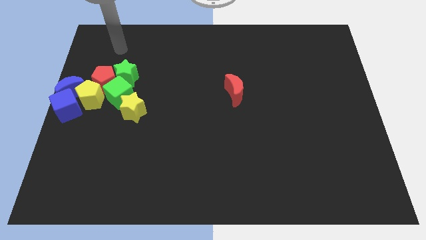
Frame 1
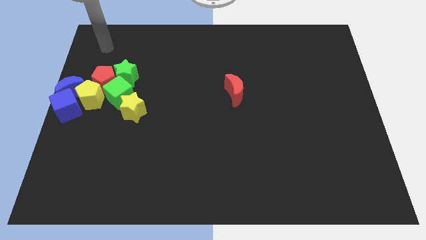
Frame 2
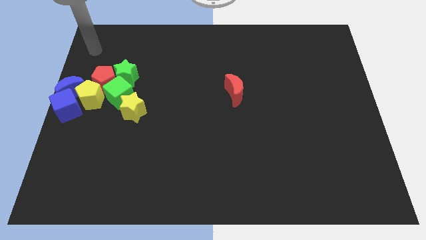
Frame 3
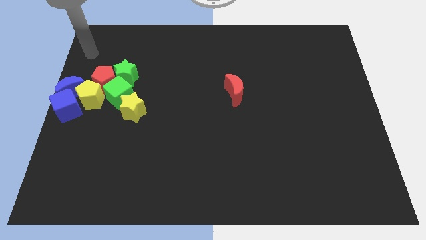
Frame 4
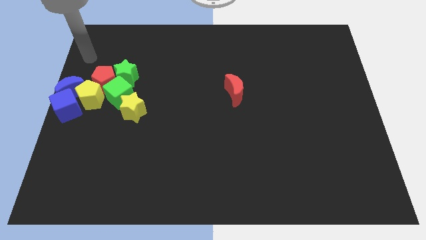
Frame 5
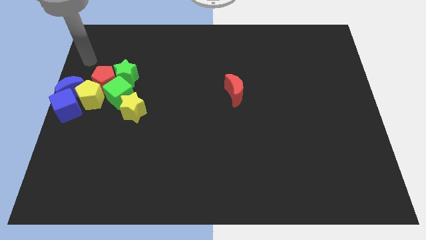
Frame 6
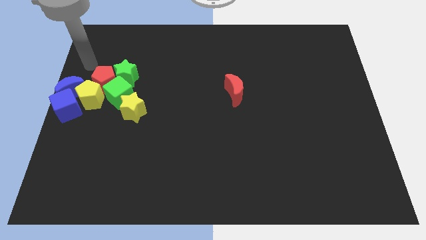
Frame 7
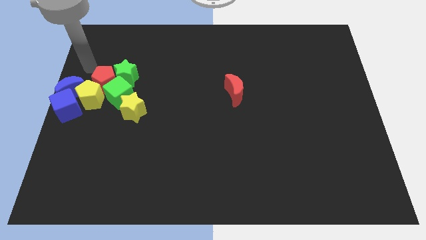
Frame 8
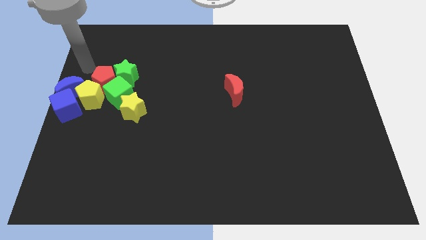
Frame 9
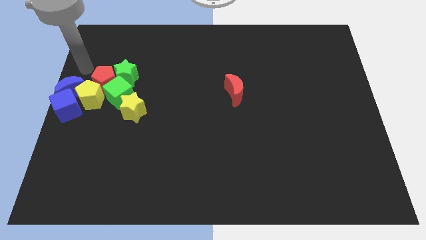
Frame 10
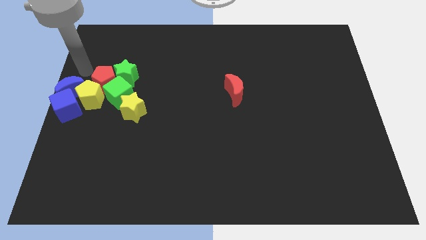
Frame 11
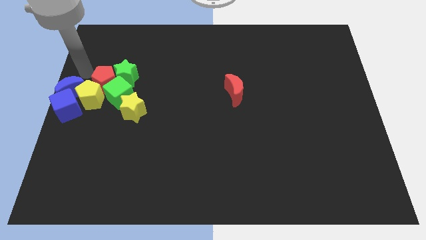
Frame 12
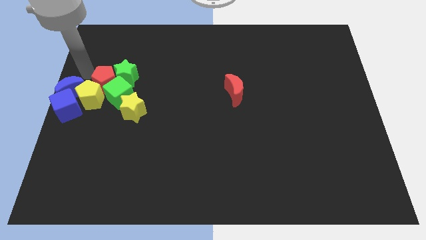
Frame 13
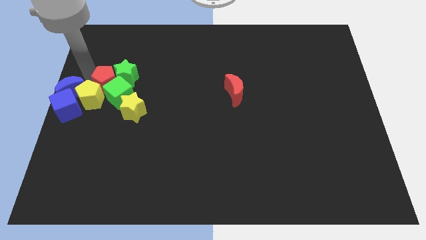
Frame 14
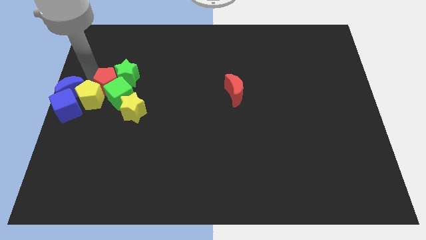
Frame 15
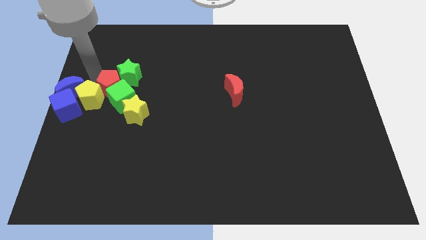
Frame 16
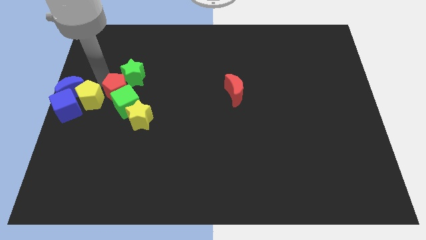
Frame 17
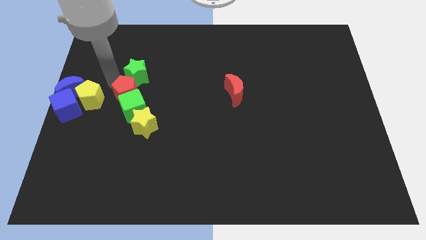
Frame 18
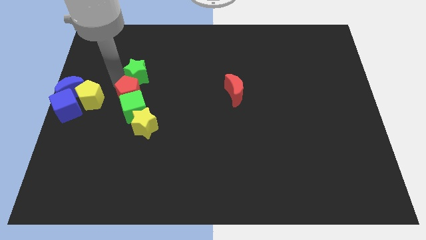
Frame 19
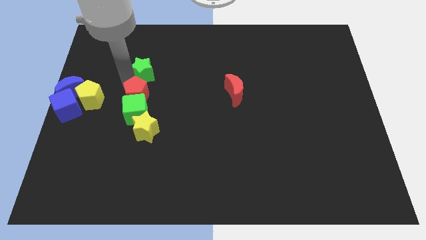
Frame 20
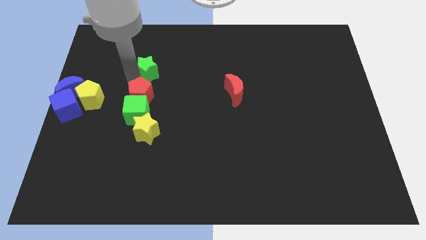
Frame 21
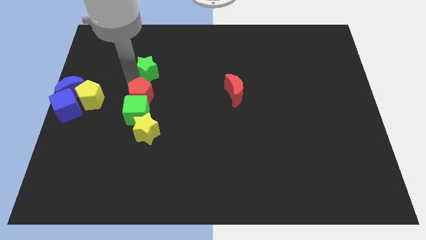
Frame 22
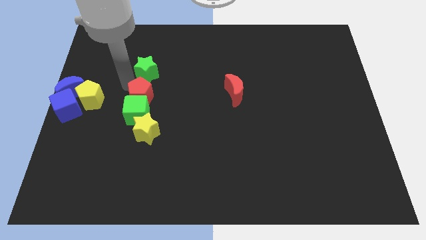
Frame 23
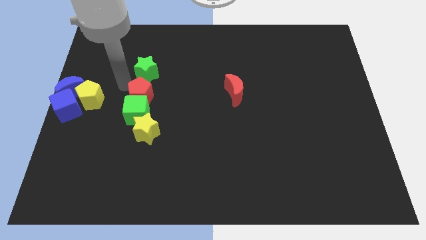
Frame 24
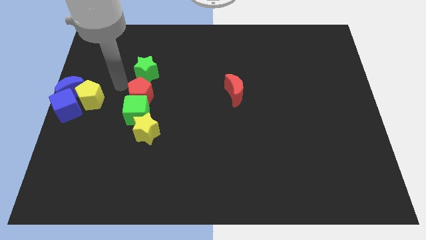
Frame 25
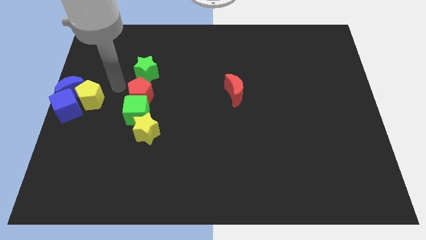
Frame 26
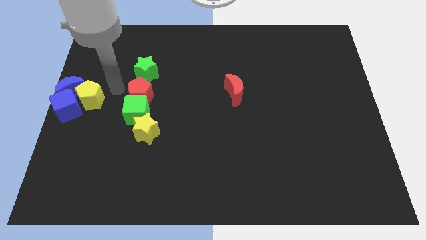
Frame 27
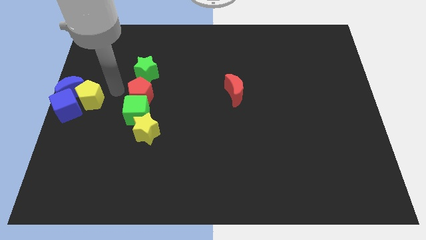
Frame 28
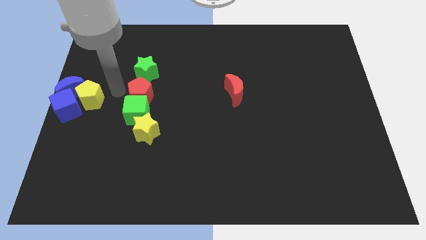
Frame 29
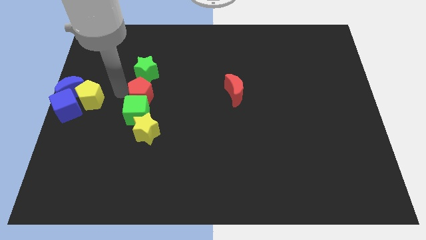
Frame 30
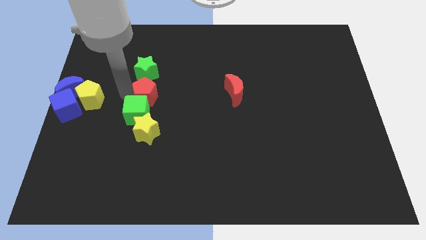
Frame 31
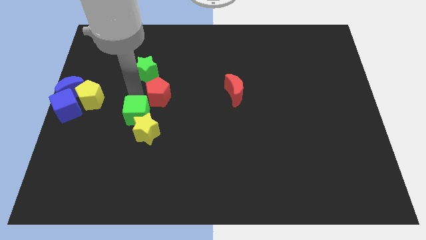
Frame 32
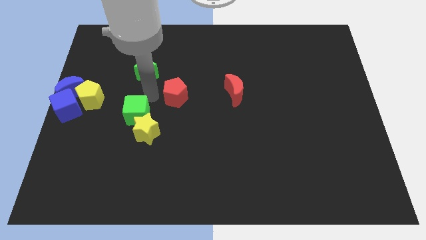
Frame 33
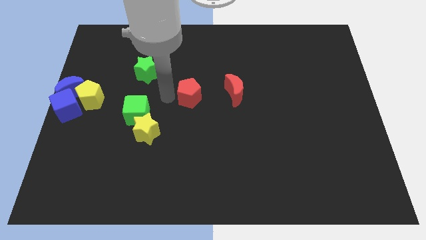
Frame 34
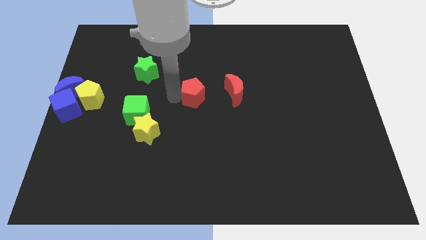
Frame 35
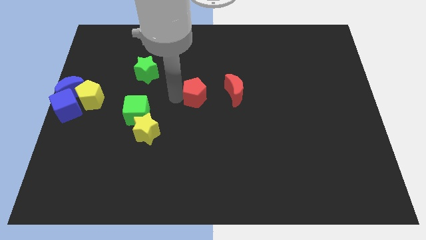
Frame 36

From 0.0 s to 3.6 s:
drag the red pentagon towards the red moon

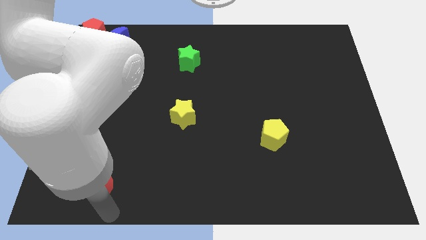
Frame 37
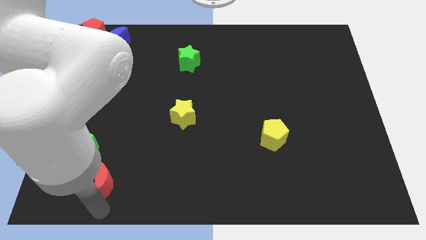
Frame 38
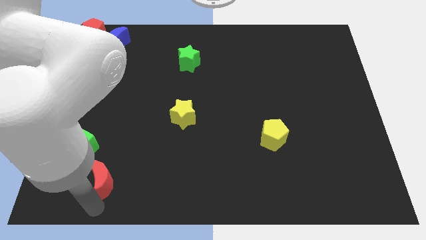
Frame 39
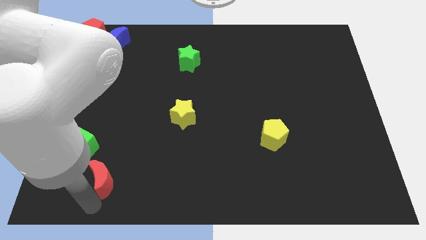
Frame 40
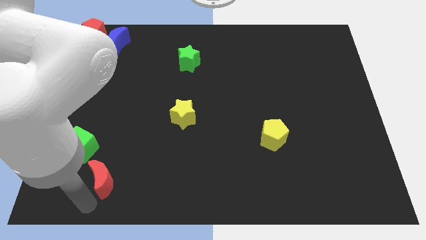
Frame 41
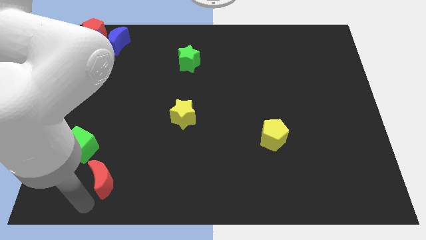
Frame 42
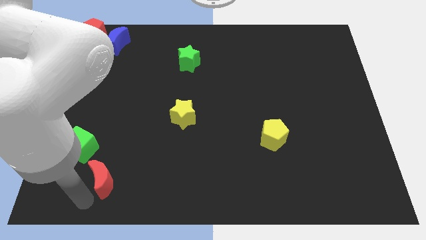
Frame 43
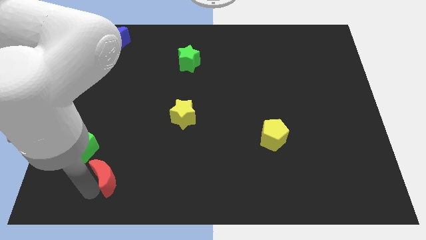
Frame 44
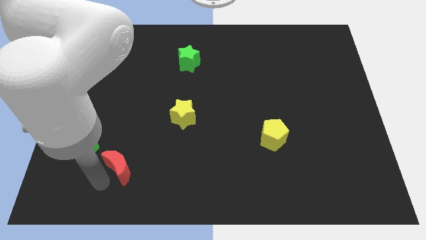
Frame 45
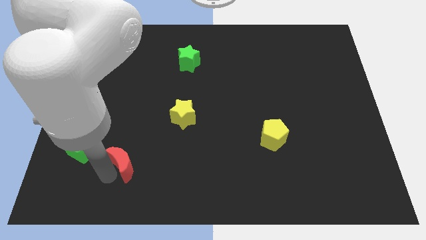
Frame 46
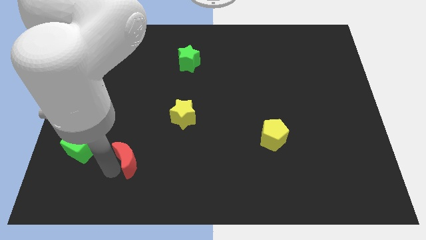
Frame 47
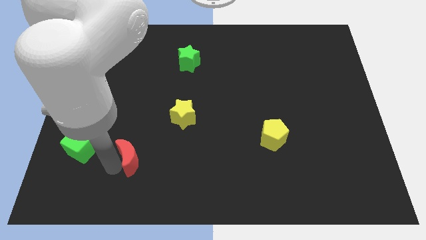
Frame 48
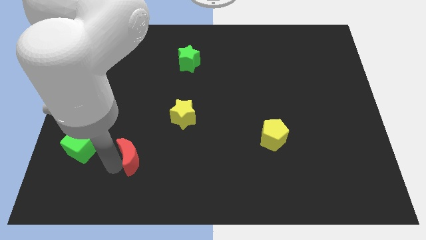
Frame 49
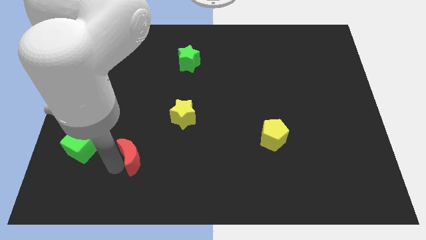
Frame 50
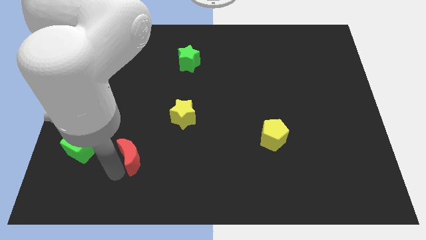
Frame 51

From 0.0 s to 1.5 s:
separate the red crescent and the green cube

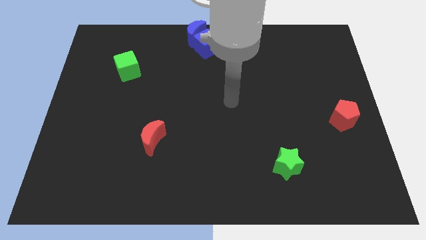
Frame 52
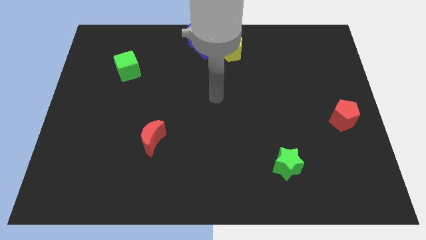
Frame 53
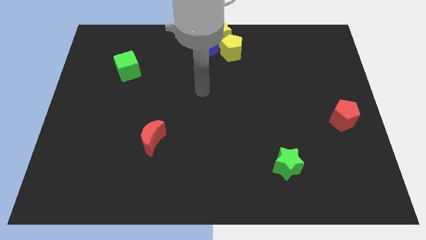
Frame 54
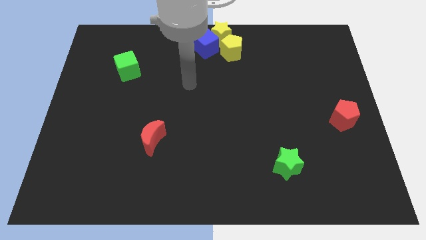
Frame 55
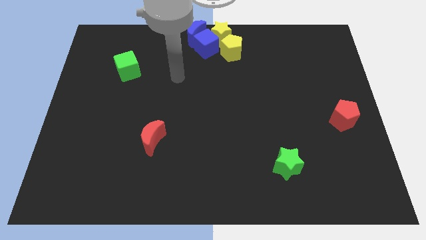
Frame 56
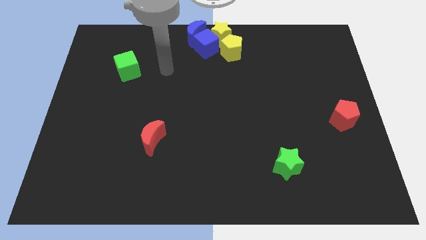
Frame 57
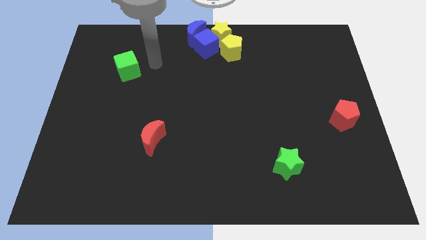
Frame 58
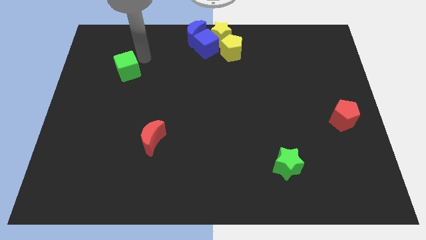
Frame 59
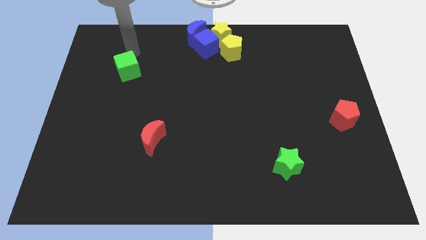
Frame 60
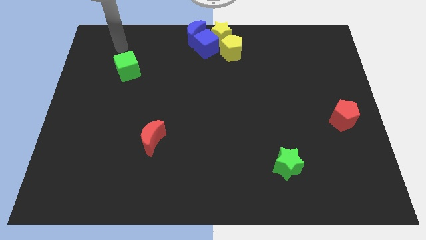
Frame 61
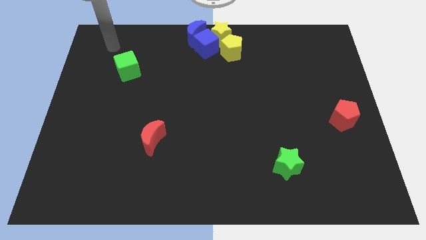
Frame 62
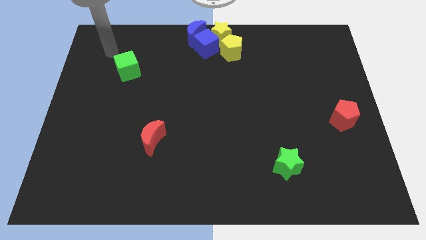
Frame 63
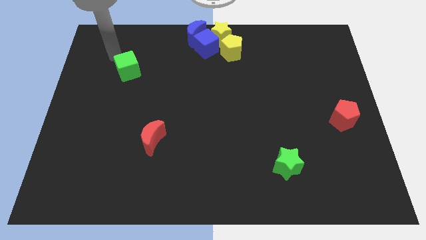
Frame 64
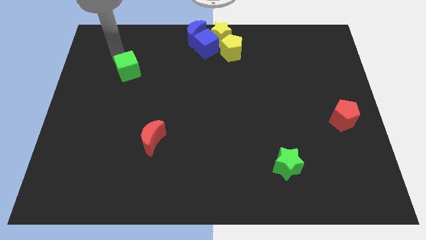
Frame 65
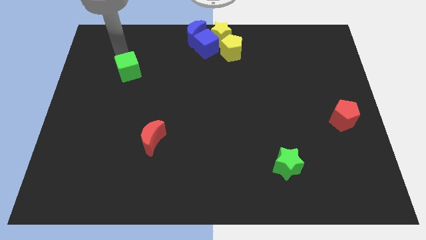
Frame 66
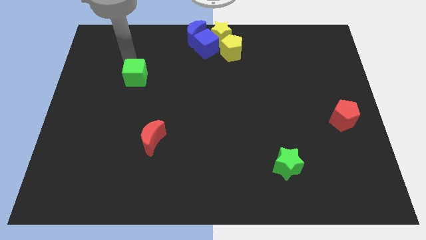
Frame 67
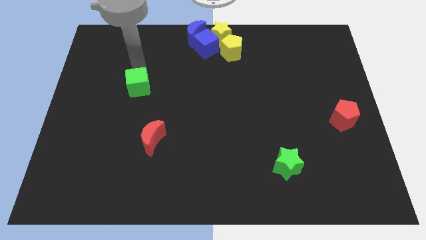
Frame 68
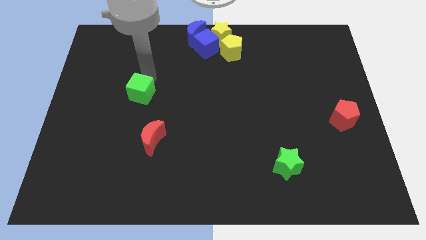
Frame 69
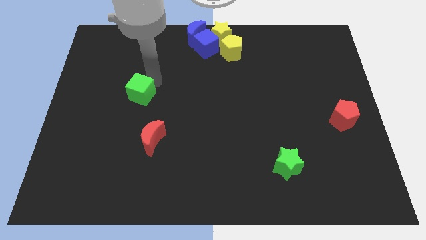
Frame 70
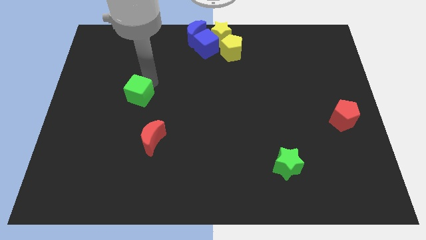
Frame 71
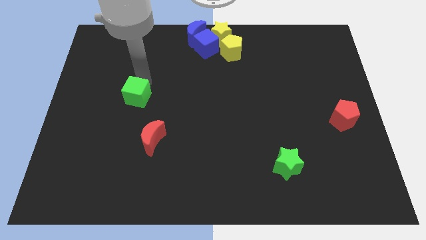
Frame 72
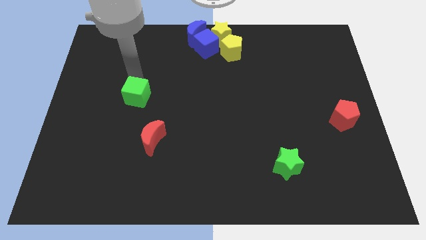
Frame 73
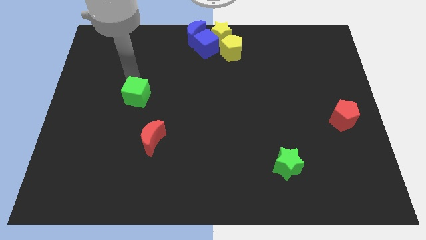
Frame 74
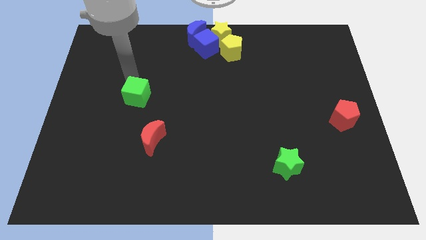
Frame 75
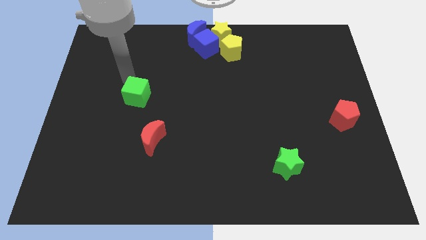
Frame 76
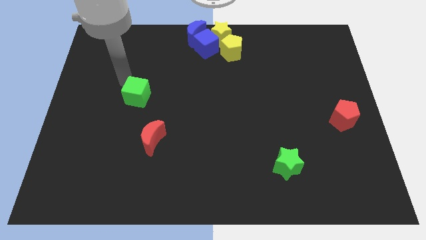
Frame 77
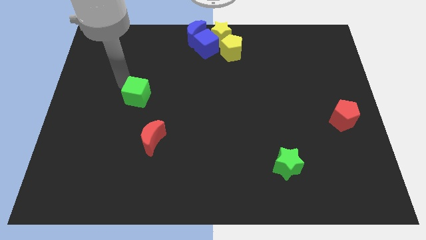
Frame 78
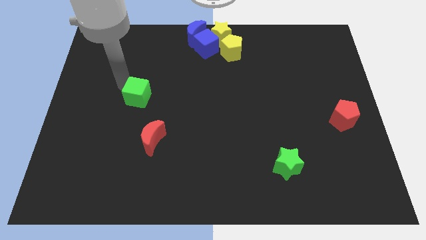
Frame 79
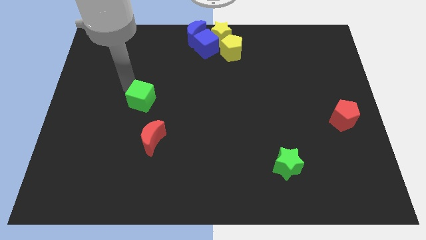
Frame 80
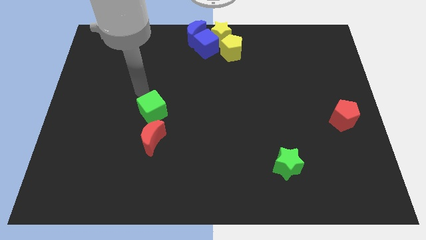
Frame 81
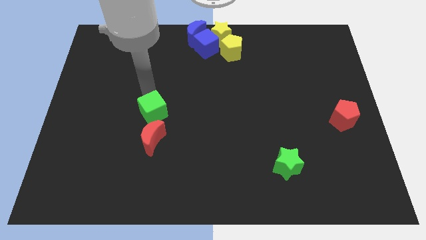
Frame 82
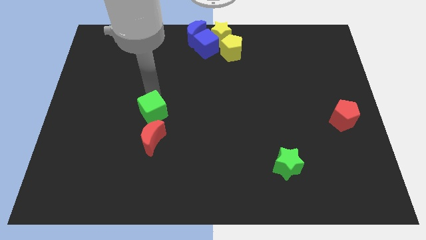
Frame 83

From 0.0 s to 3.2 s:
place green cube above red moon

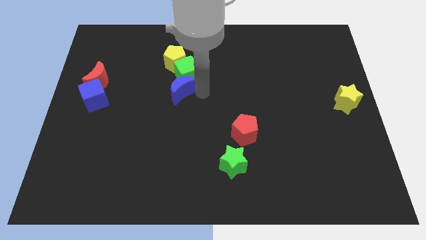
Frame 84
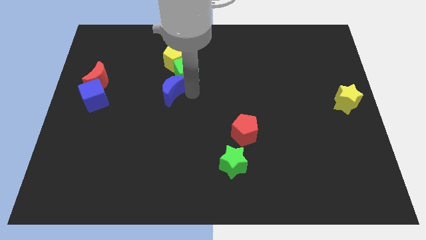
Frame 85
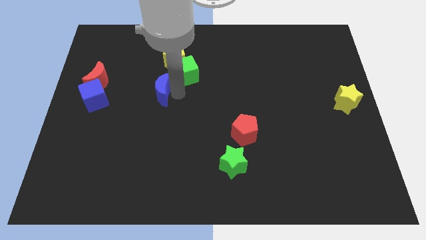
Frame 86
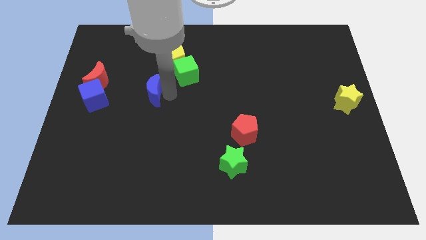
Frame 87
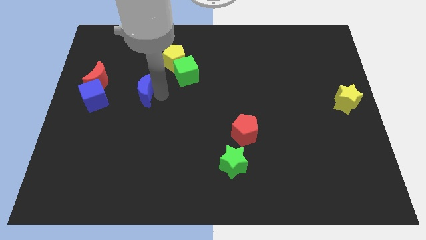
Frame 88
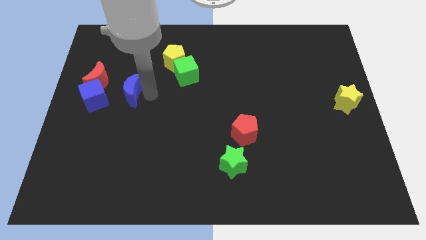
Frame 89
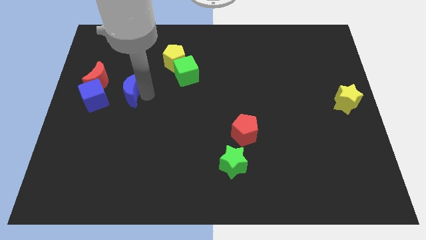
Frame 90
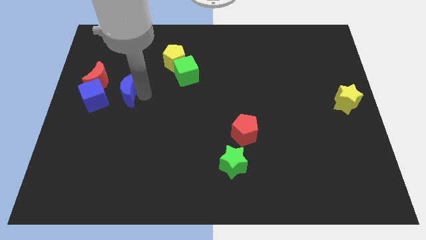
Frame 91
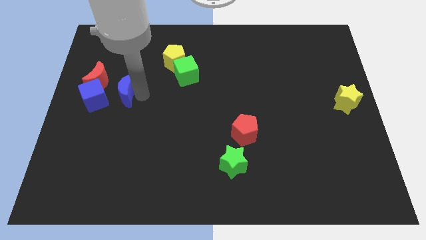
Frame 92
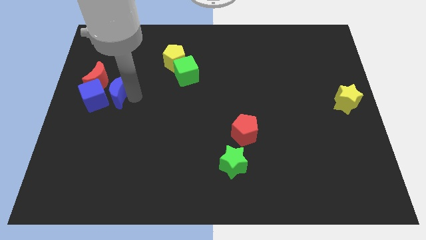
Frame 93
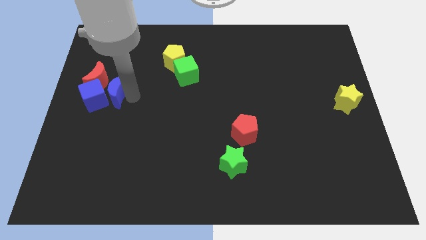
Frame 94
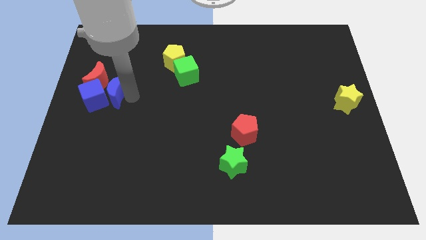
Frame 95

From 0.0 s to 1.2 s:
move the blue moon towards the blue cube
